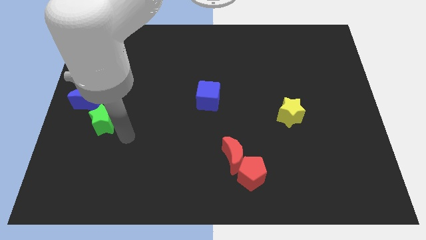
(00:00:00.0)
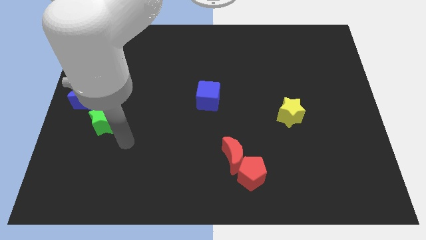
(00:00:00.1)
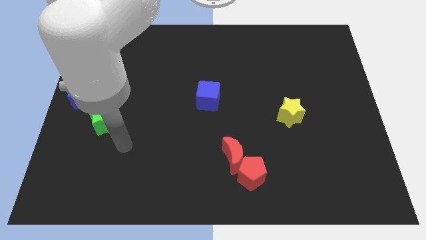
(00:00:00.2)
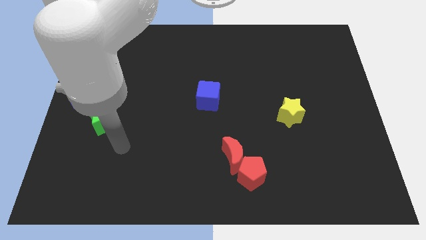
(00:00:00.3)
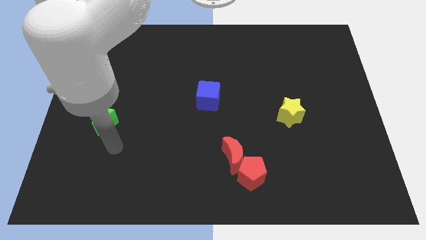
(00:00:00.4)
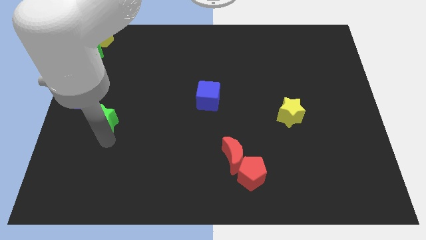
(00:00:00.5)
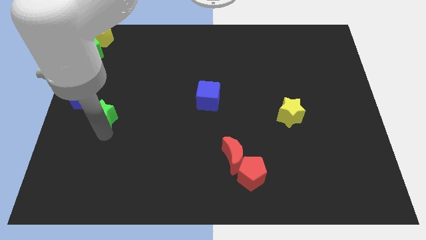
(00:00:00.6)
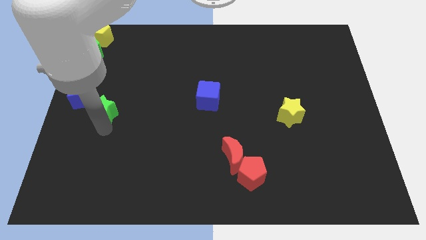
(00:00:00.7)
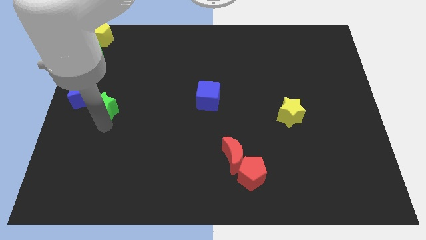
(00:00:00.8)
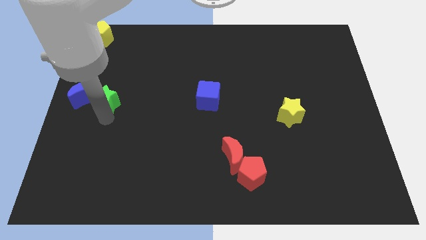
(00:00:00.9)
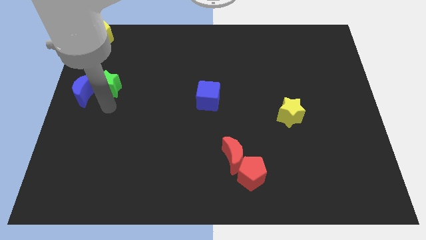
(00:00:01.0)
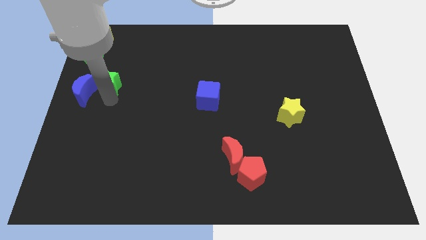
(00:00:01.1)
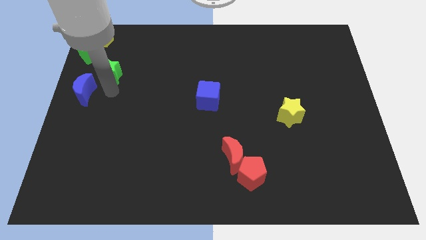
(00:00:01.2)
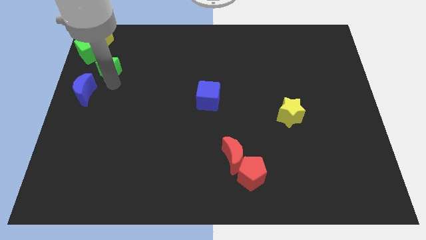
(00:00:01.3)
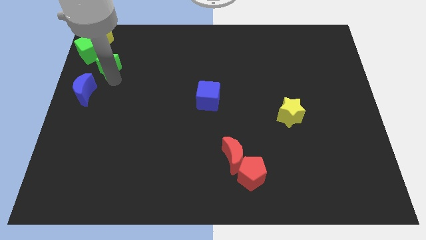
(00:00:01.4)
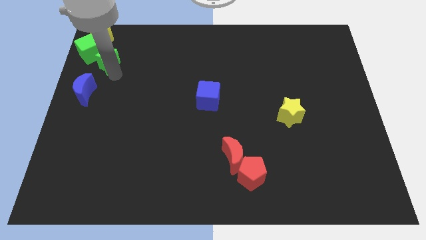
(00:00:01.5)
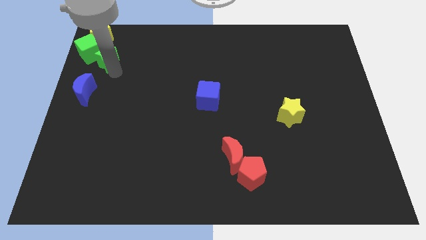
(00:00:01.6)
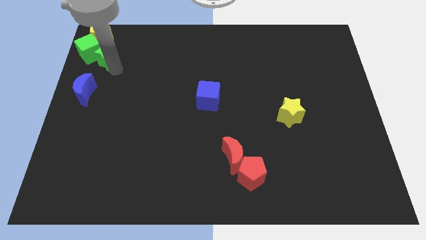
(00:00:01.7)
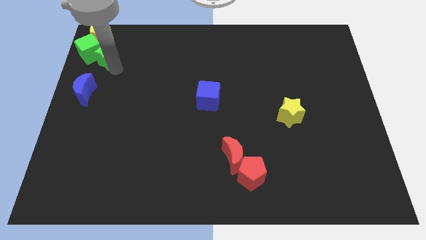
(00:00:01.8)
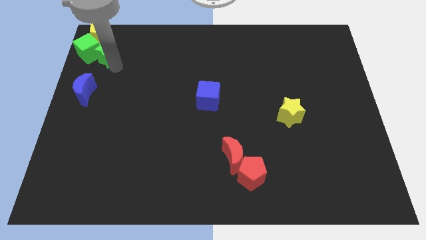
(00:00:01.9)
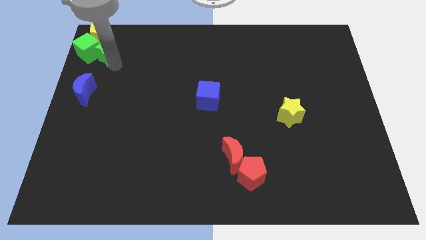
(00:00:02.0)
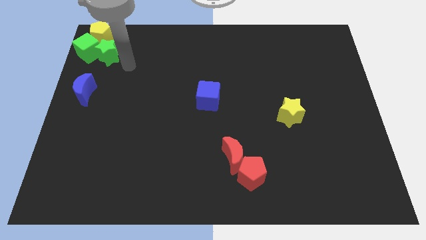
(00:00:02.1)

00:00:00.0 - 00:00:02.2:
push the green star into the green cube

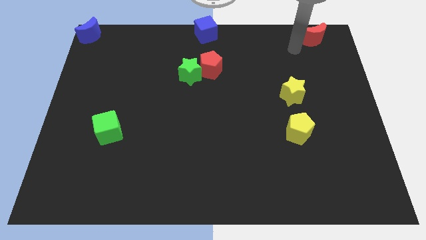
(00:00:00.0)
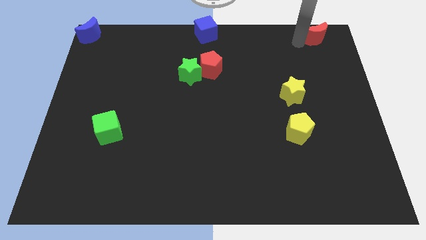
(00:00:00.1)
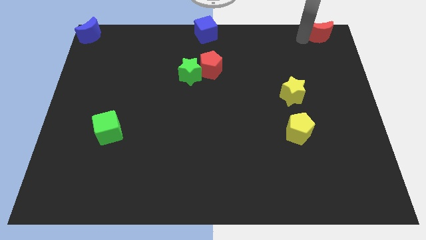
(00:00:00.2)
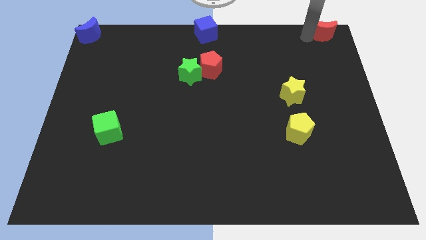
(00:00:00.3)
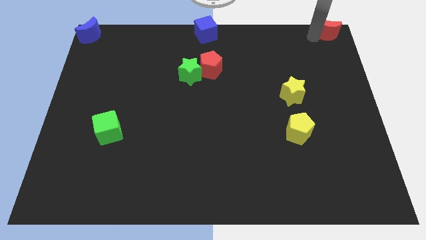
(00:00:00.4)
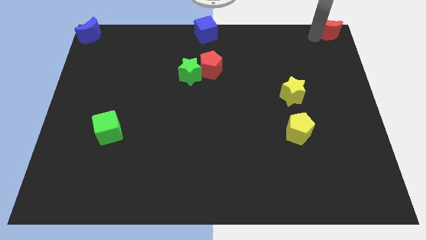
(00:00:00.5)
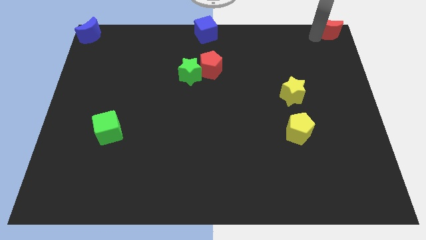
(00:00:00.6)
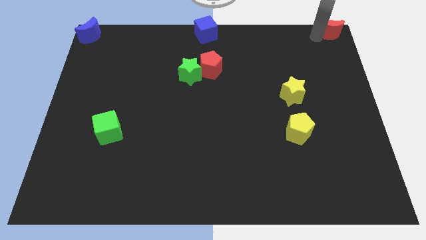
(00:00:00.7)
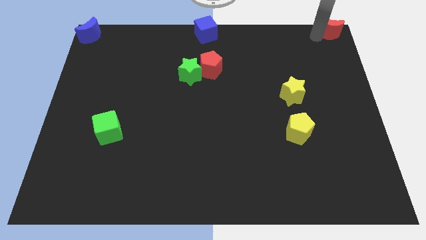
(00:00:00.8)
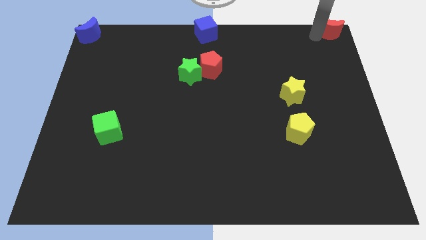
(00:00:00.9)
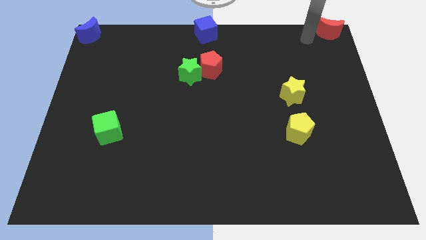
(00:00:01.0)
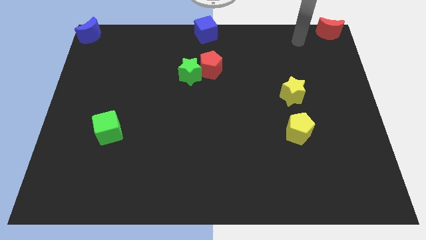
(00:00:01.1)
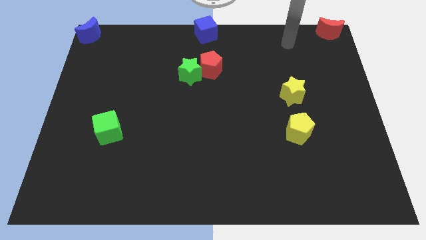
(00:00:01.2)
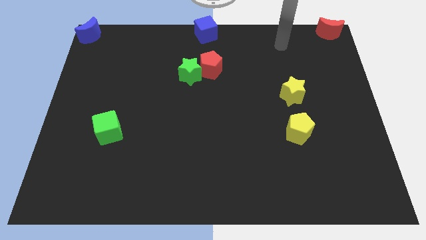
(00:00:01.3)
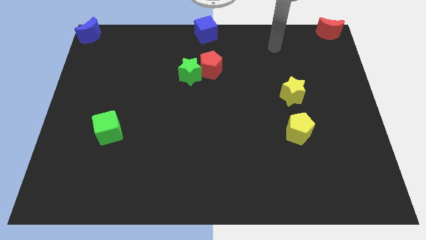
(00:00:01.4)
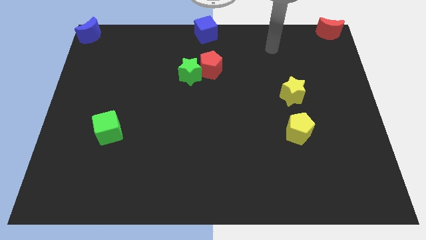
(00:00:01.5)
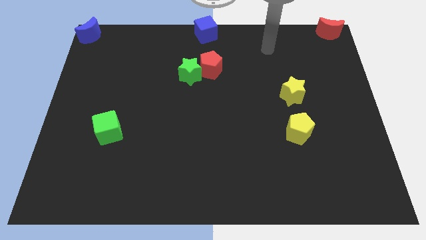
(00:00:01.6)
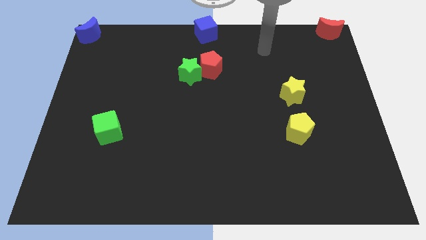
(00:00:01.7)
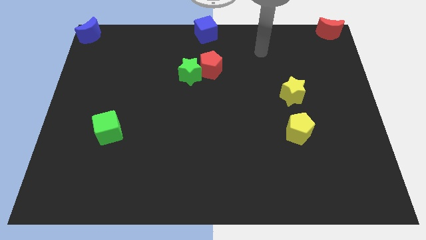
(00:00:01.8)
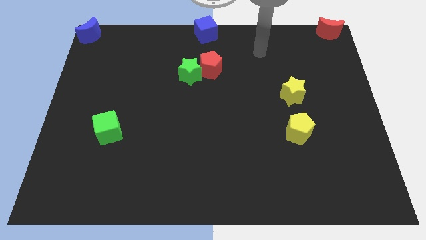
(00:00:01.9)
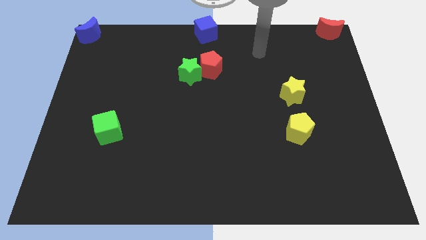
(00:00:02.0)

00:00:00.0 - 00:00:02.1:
push the red moon to the top right corner

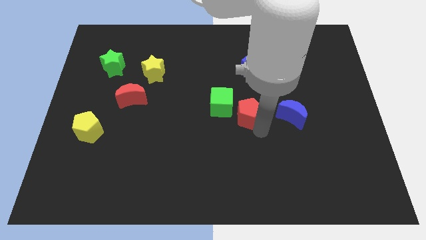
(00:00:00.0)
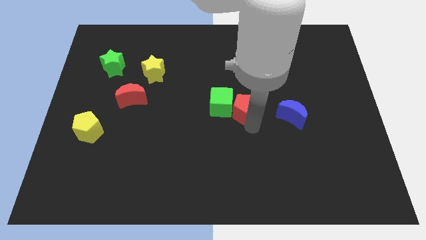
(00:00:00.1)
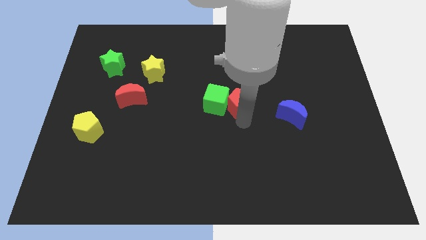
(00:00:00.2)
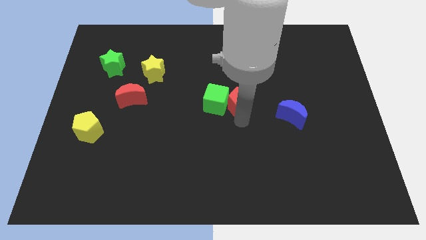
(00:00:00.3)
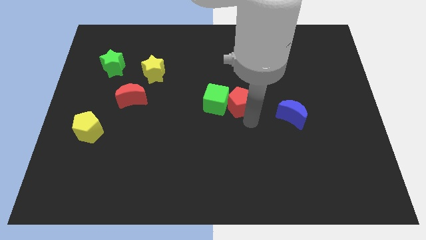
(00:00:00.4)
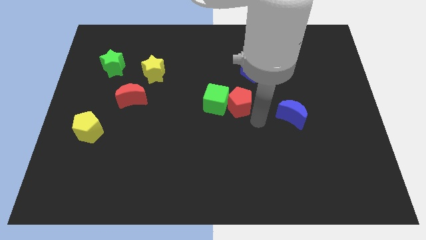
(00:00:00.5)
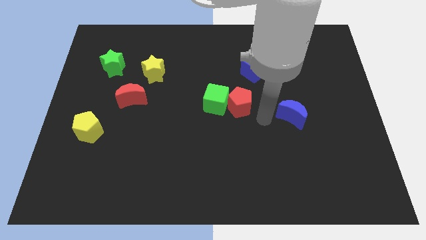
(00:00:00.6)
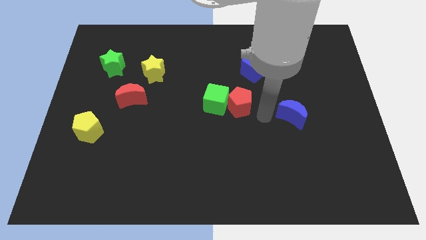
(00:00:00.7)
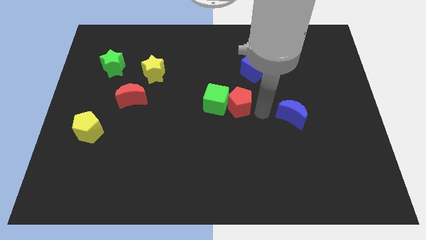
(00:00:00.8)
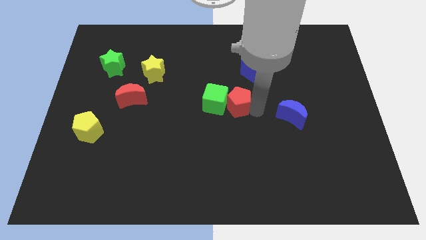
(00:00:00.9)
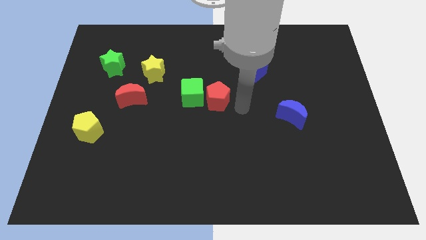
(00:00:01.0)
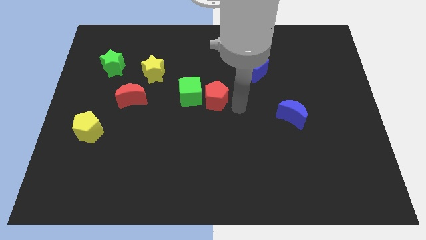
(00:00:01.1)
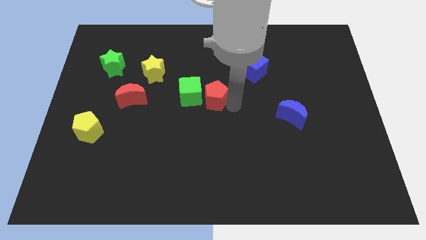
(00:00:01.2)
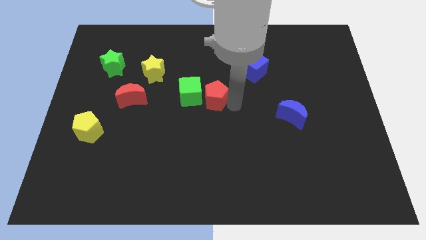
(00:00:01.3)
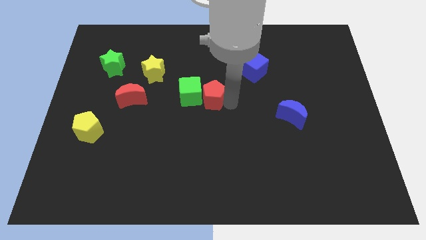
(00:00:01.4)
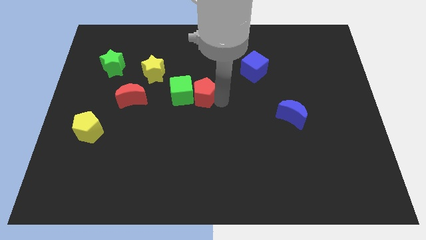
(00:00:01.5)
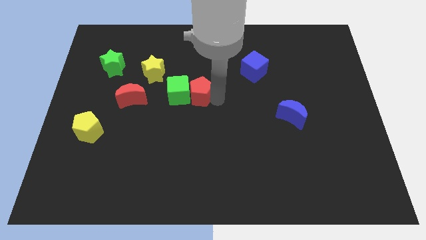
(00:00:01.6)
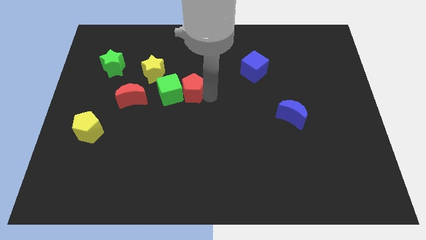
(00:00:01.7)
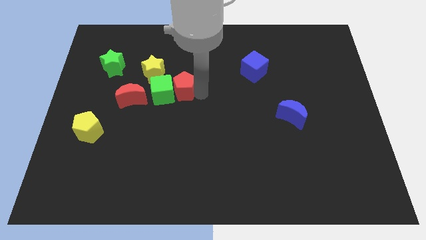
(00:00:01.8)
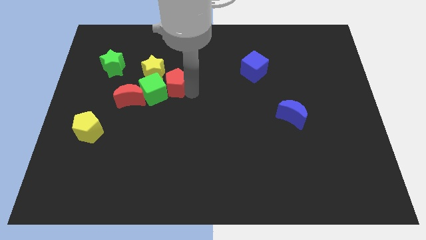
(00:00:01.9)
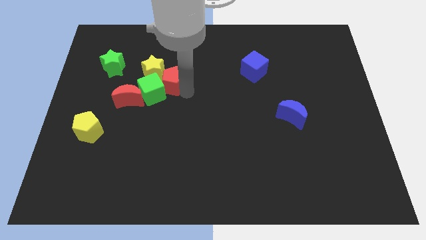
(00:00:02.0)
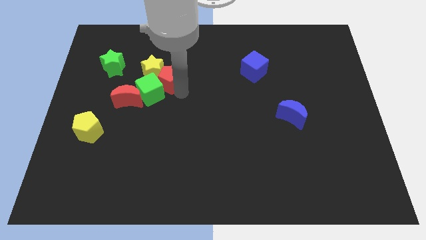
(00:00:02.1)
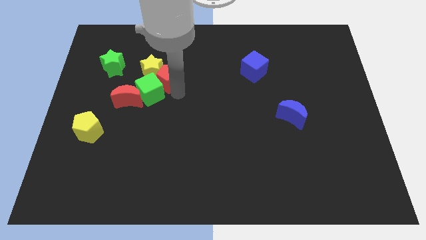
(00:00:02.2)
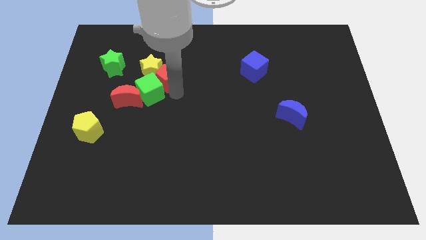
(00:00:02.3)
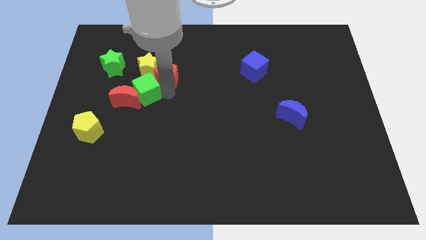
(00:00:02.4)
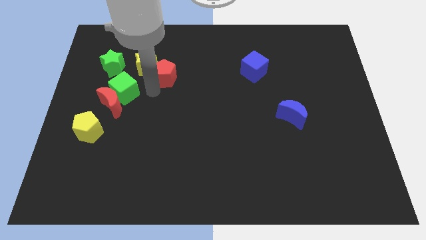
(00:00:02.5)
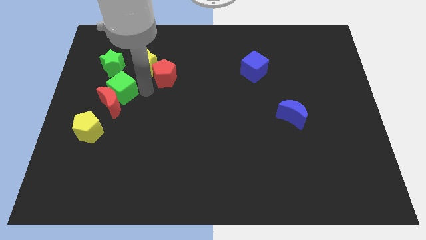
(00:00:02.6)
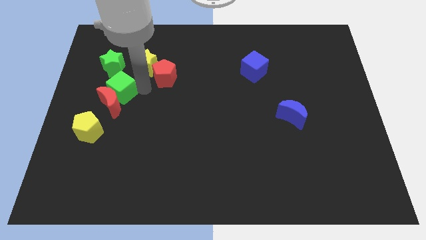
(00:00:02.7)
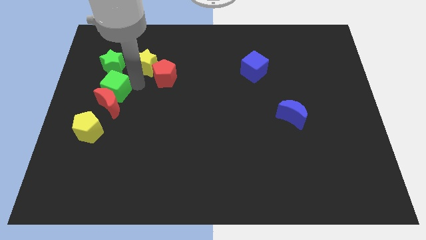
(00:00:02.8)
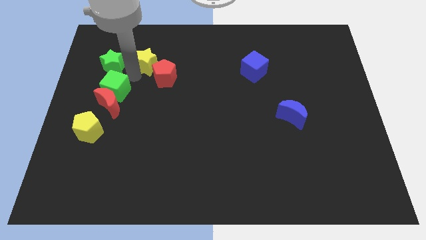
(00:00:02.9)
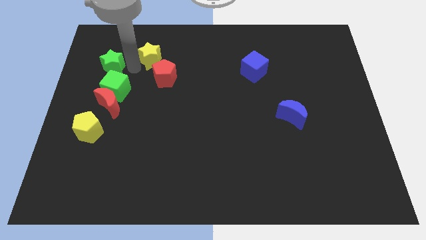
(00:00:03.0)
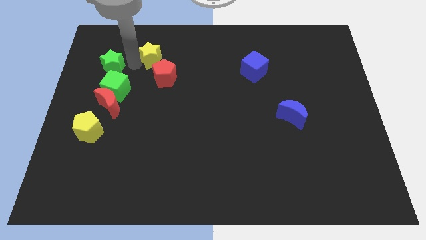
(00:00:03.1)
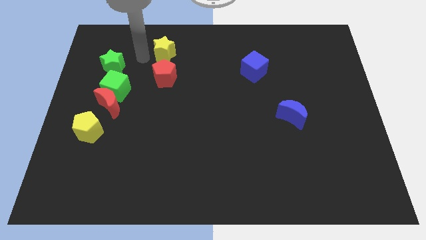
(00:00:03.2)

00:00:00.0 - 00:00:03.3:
place the green cube in between the red crescent and green star

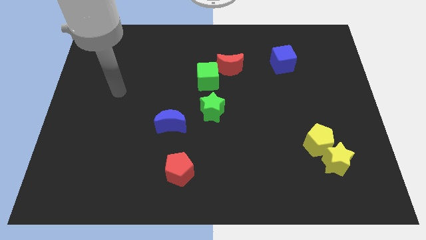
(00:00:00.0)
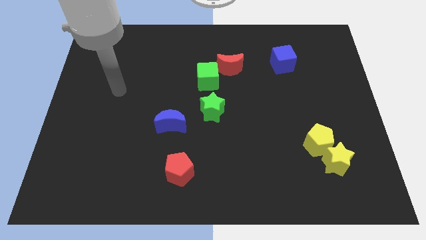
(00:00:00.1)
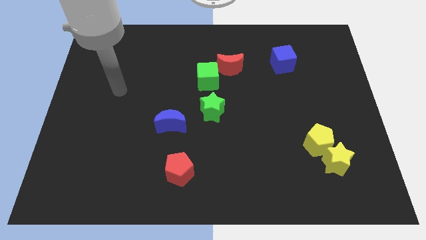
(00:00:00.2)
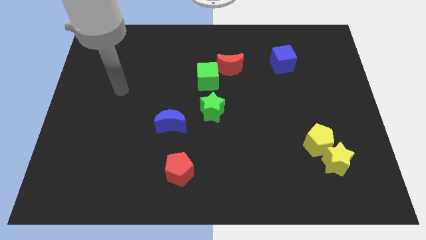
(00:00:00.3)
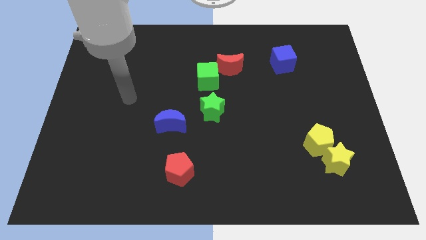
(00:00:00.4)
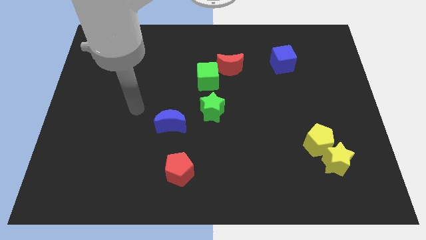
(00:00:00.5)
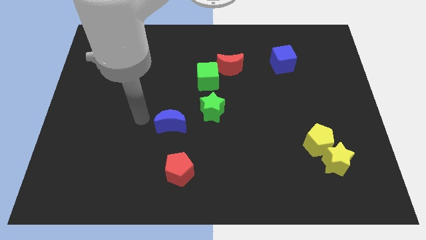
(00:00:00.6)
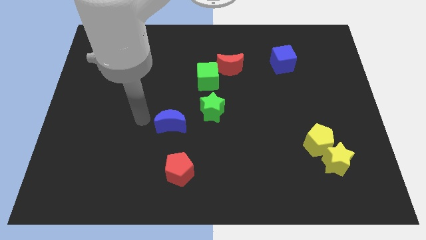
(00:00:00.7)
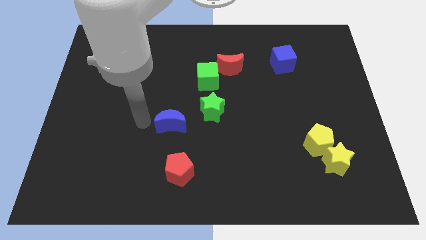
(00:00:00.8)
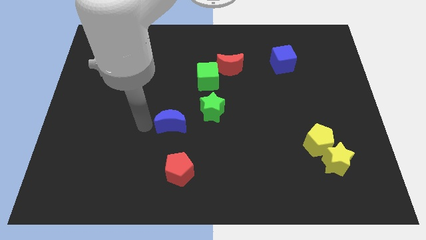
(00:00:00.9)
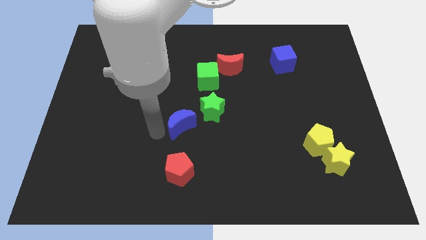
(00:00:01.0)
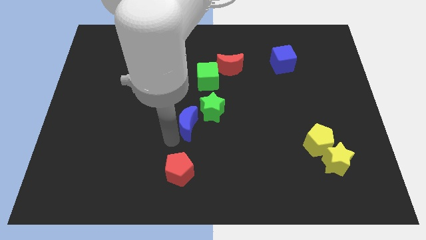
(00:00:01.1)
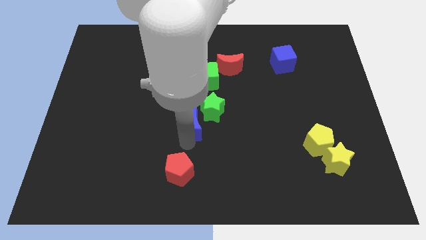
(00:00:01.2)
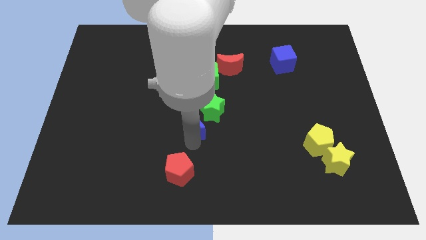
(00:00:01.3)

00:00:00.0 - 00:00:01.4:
slightly turn the blue moon
